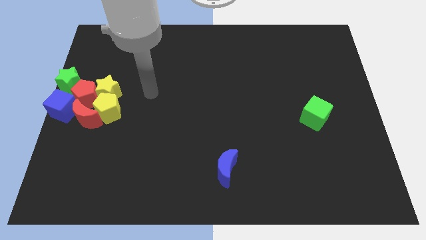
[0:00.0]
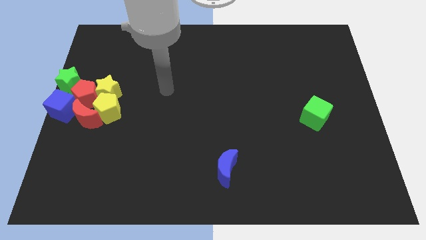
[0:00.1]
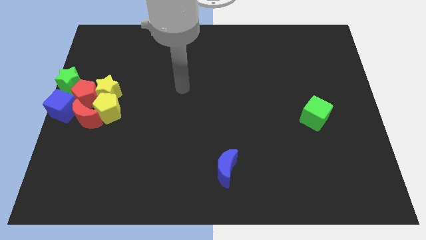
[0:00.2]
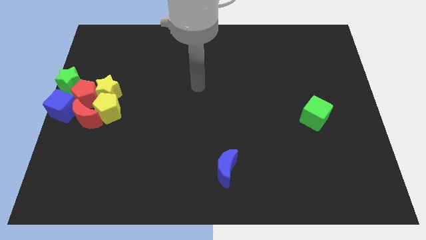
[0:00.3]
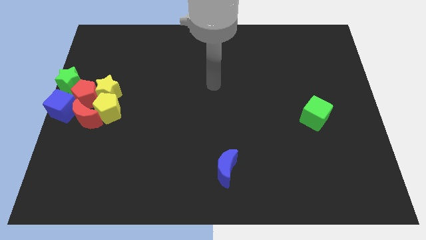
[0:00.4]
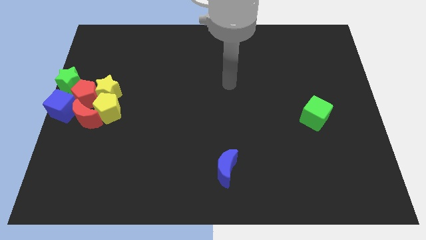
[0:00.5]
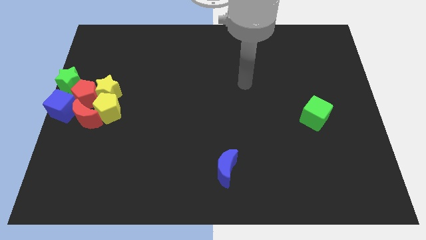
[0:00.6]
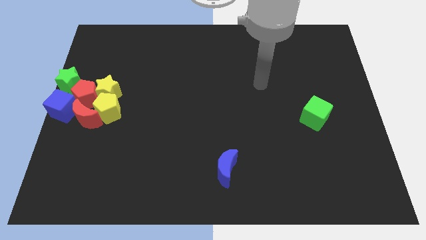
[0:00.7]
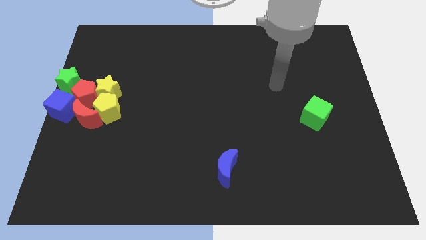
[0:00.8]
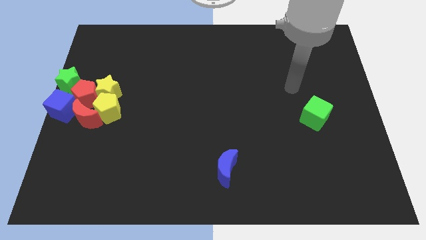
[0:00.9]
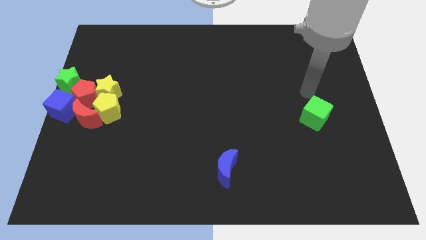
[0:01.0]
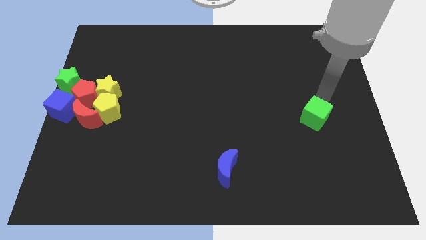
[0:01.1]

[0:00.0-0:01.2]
move your arm to the top of the green cube

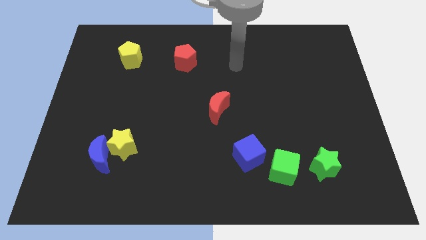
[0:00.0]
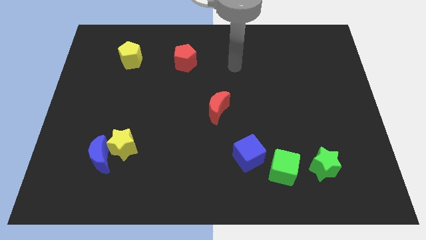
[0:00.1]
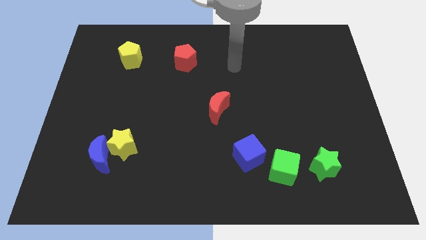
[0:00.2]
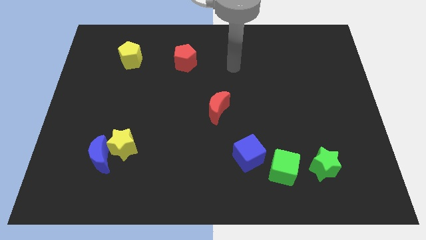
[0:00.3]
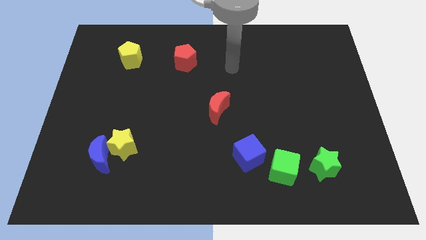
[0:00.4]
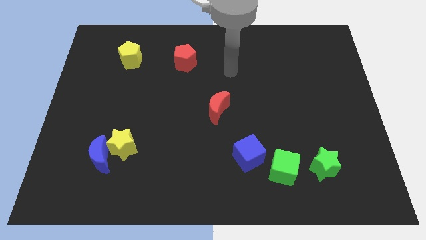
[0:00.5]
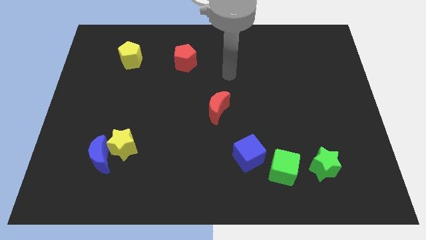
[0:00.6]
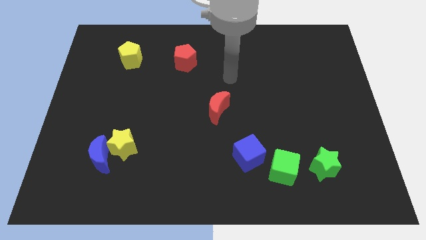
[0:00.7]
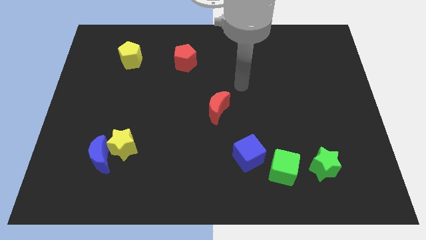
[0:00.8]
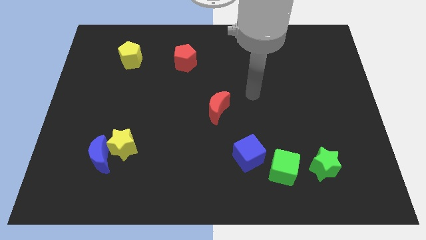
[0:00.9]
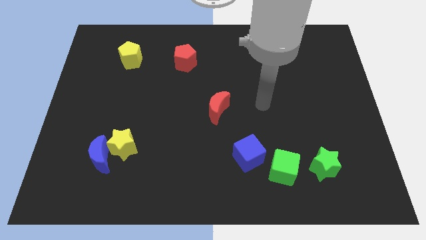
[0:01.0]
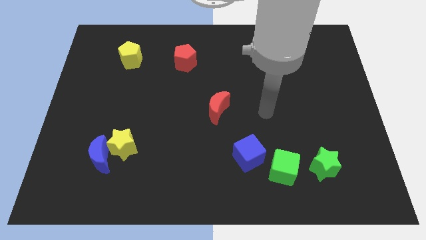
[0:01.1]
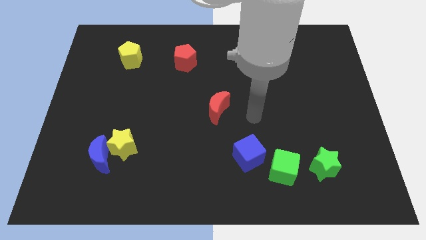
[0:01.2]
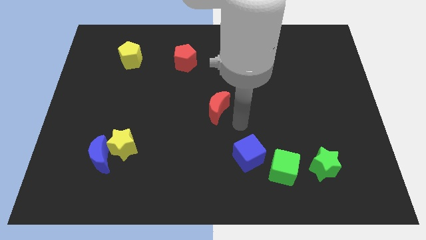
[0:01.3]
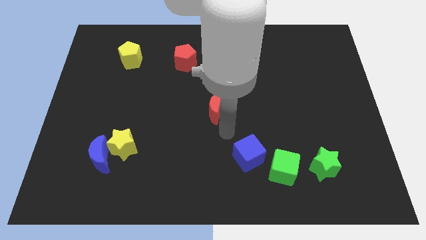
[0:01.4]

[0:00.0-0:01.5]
point your arm at the bottom right of the red moon

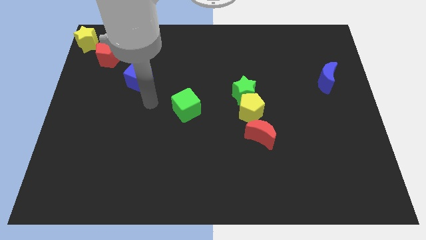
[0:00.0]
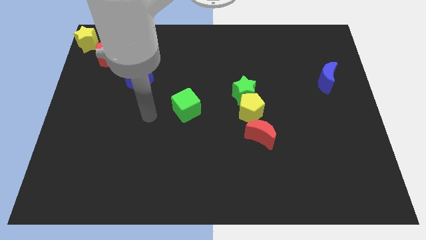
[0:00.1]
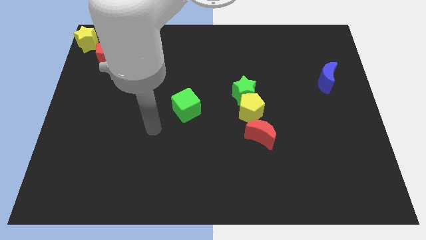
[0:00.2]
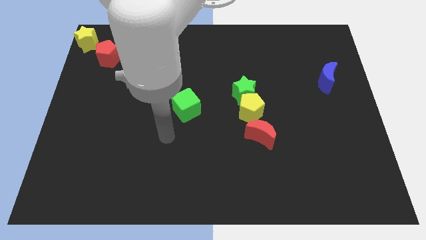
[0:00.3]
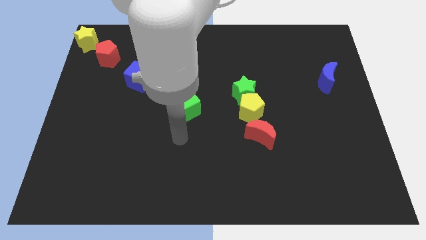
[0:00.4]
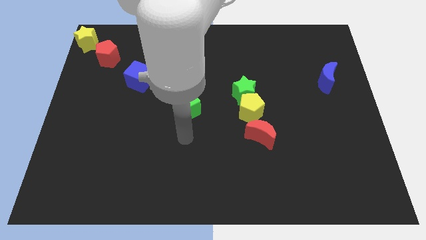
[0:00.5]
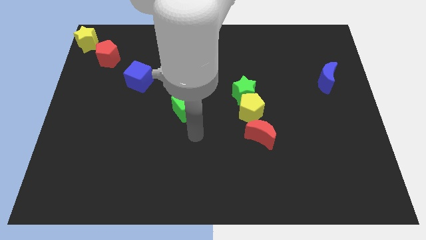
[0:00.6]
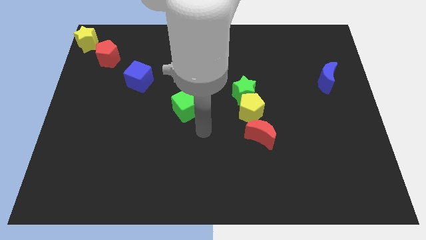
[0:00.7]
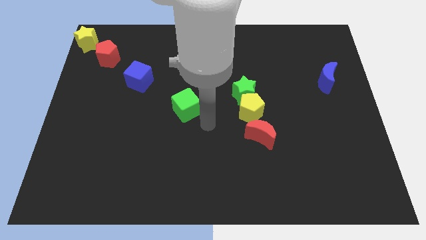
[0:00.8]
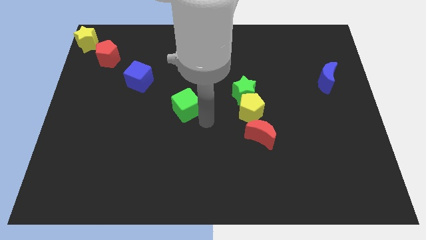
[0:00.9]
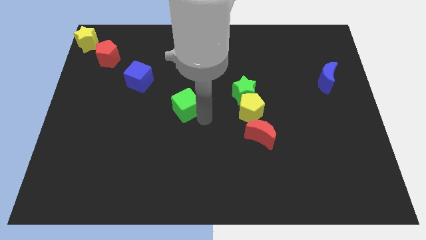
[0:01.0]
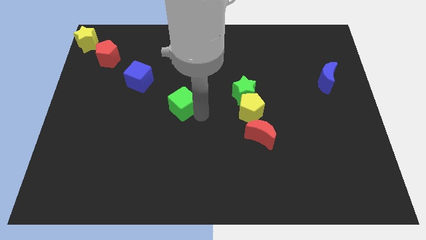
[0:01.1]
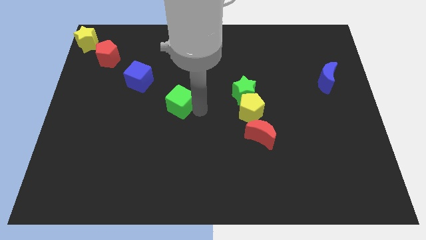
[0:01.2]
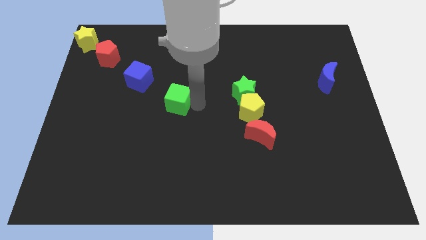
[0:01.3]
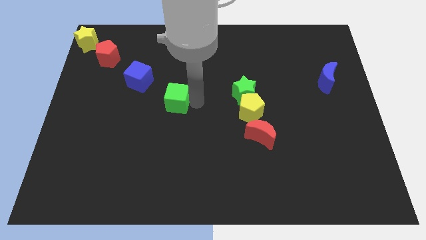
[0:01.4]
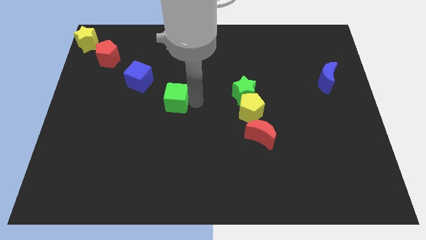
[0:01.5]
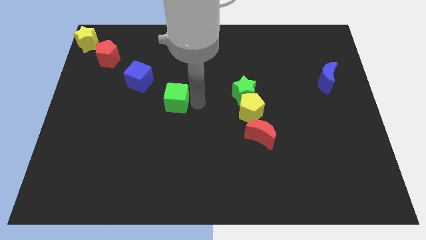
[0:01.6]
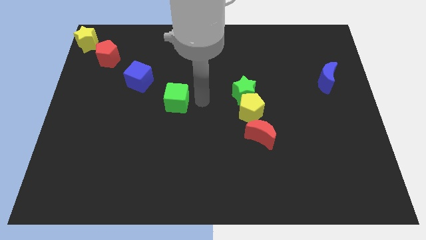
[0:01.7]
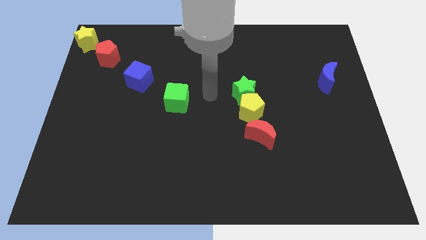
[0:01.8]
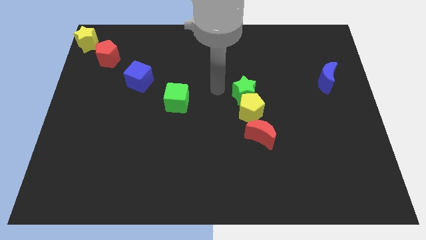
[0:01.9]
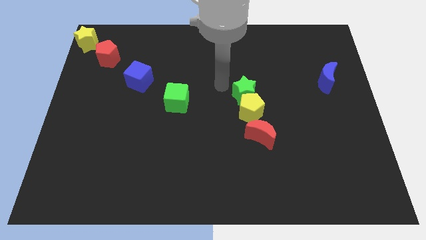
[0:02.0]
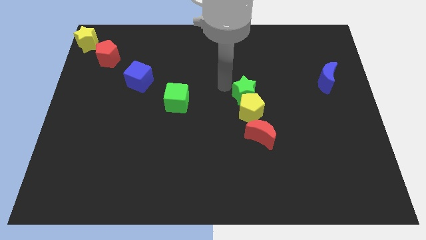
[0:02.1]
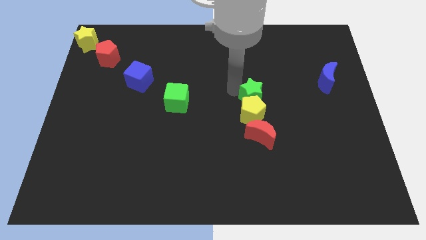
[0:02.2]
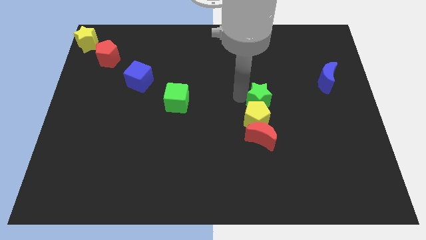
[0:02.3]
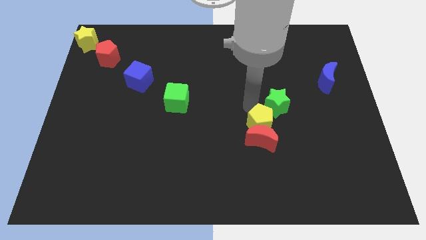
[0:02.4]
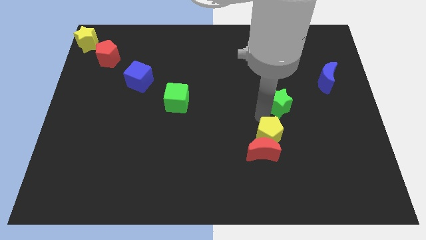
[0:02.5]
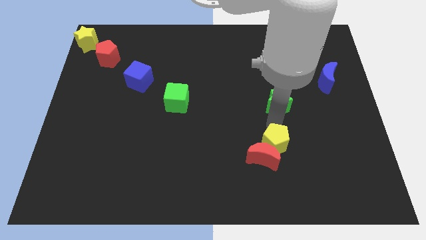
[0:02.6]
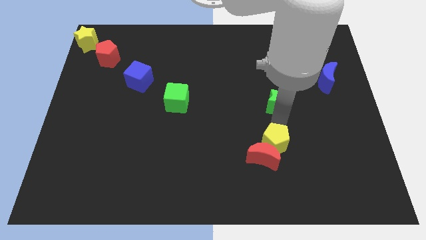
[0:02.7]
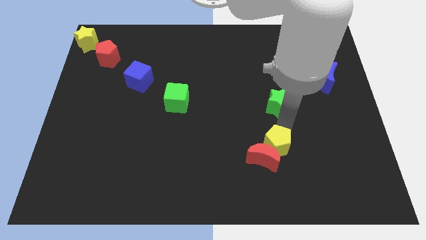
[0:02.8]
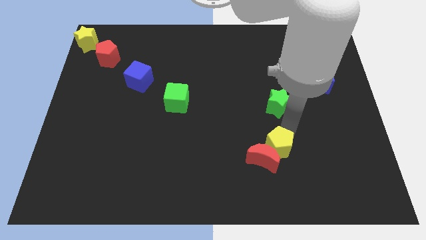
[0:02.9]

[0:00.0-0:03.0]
separate green star from the yellow pentagon

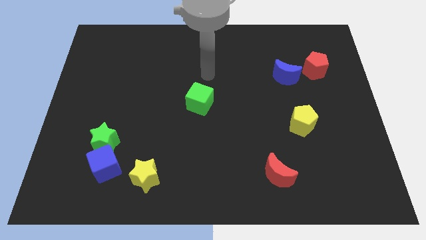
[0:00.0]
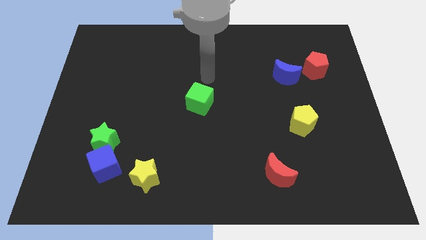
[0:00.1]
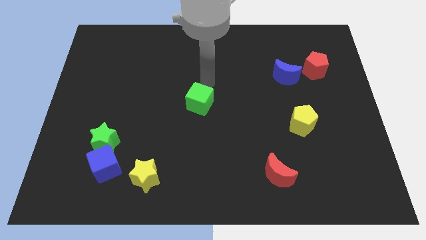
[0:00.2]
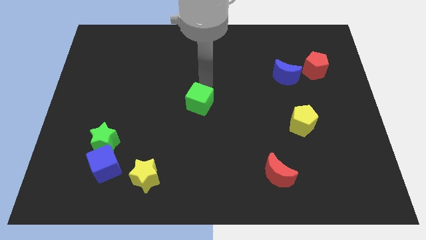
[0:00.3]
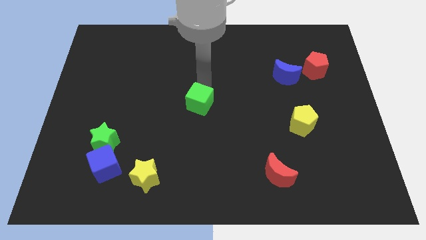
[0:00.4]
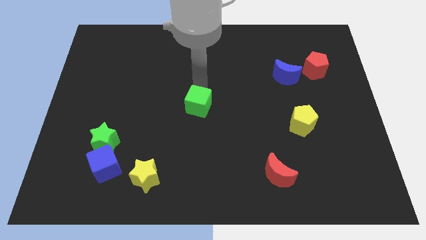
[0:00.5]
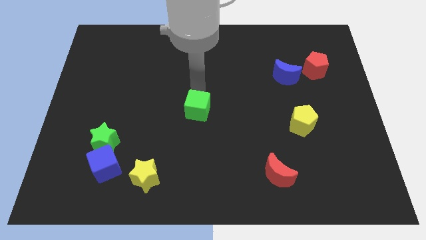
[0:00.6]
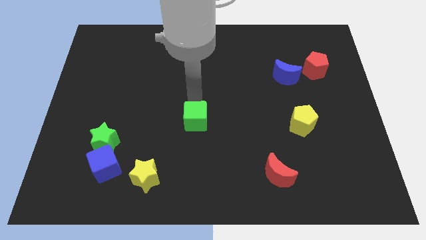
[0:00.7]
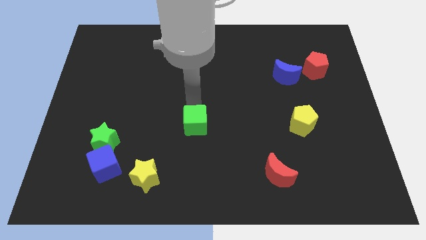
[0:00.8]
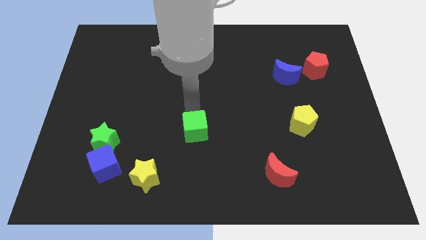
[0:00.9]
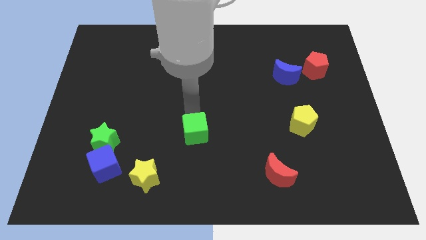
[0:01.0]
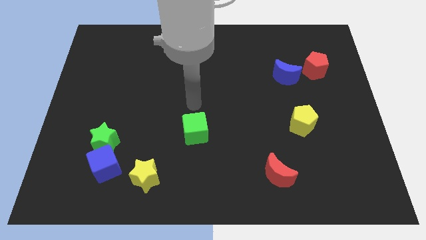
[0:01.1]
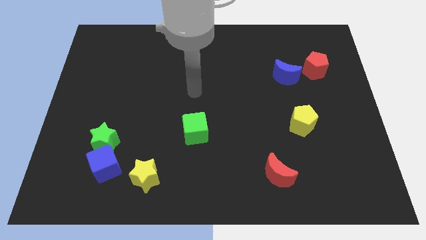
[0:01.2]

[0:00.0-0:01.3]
push the green cube towards the bottom center of the board

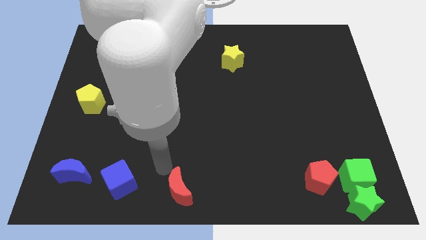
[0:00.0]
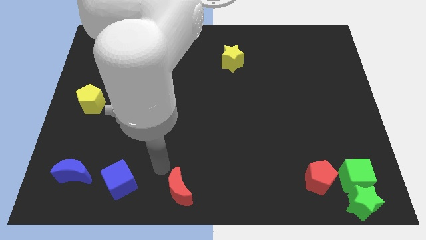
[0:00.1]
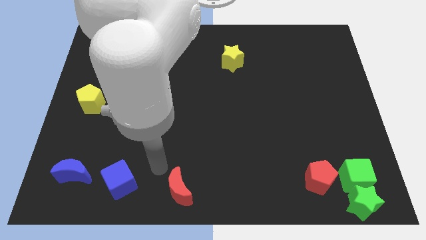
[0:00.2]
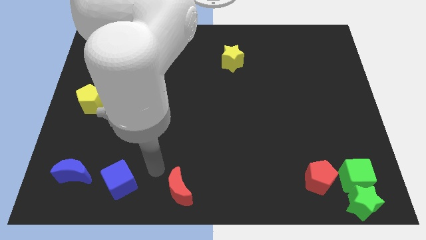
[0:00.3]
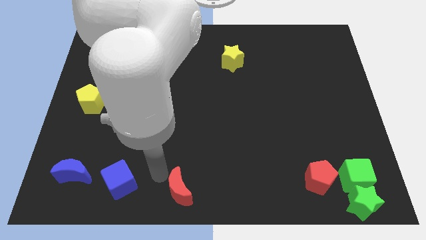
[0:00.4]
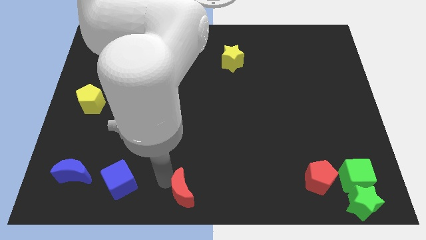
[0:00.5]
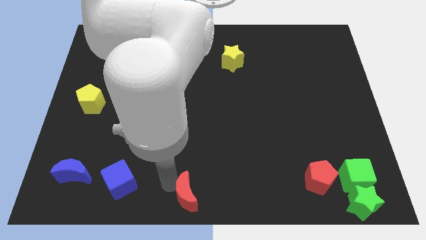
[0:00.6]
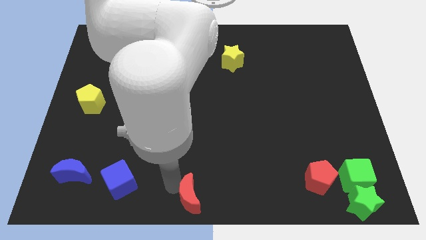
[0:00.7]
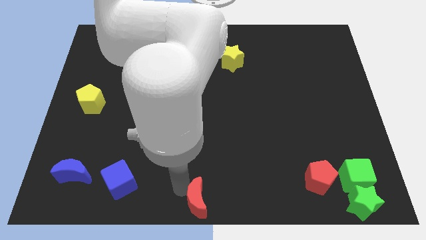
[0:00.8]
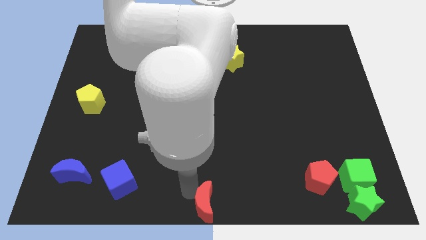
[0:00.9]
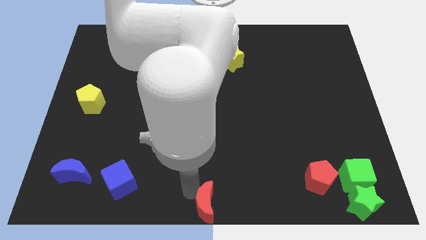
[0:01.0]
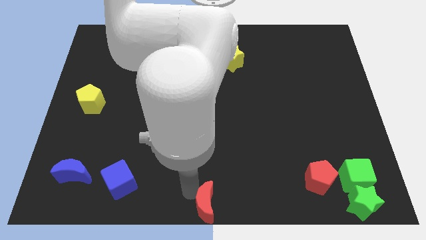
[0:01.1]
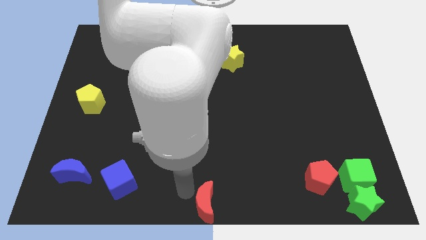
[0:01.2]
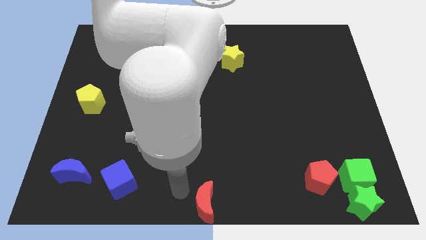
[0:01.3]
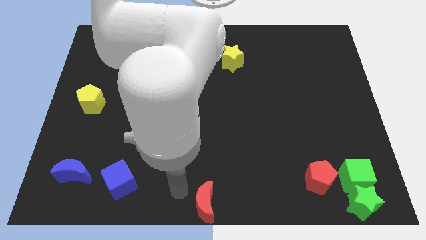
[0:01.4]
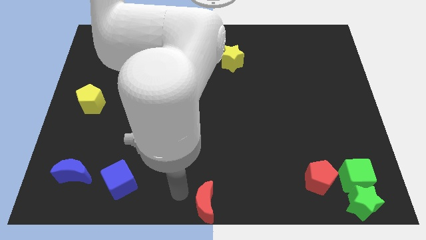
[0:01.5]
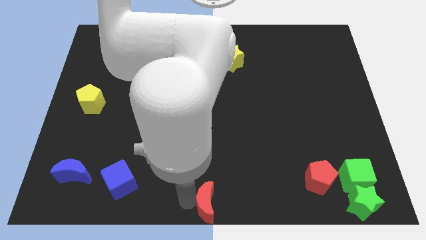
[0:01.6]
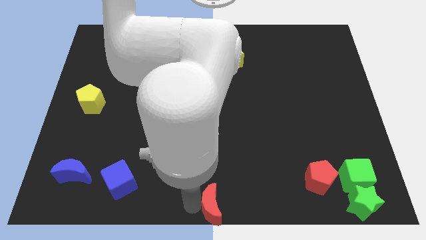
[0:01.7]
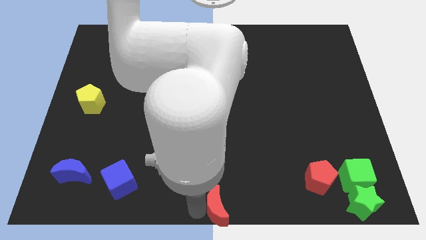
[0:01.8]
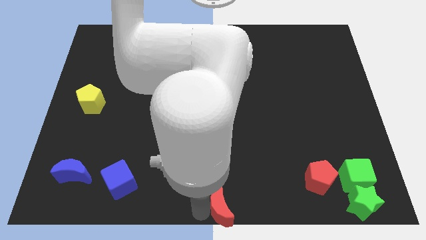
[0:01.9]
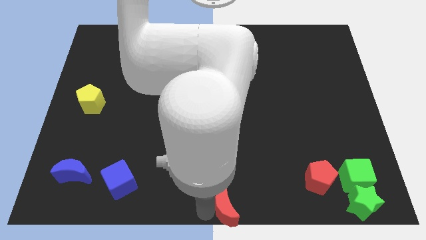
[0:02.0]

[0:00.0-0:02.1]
move the red crescent to the bottom center of the board
